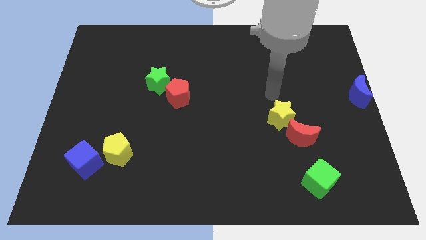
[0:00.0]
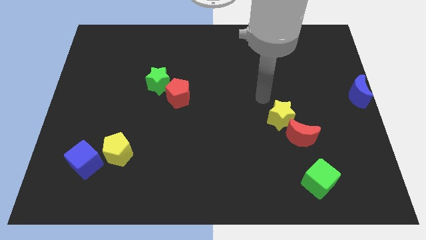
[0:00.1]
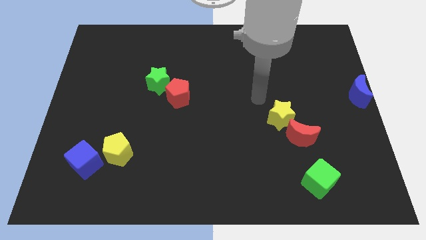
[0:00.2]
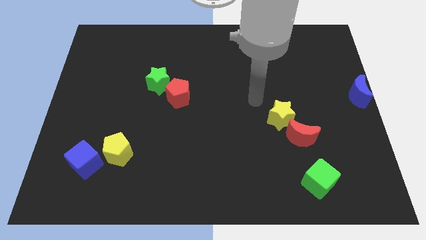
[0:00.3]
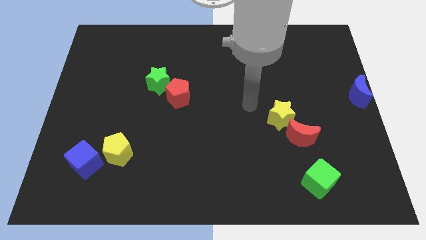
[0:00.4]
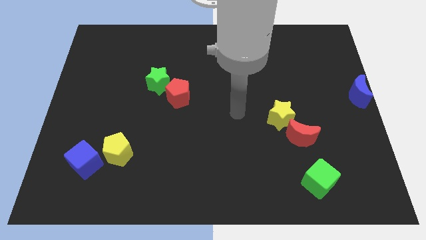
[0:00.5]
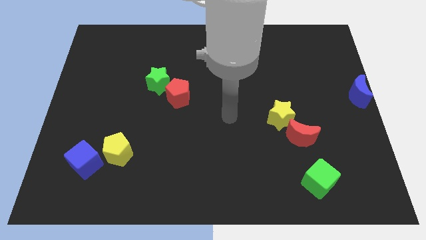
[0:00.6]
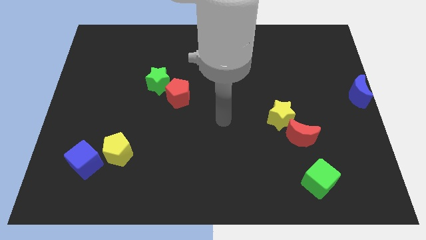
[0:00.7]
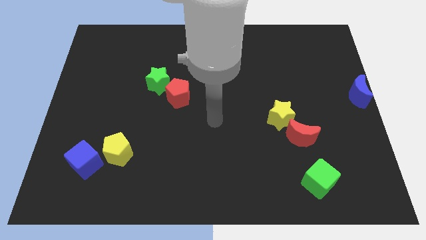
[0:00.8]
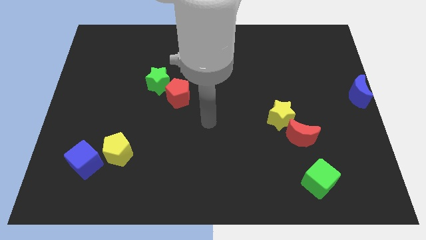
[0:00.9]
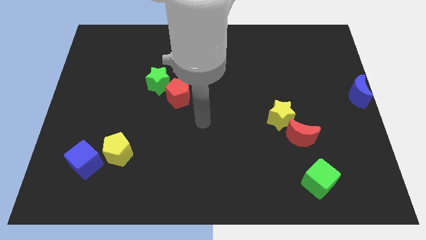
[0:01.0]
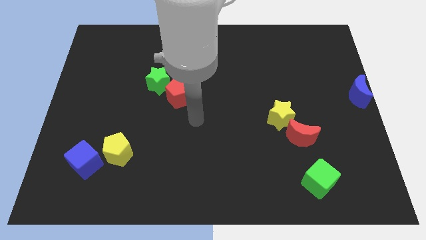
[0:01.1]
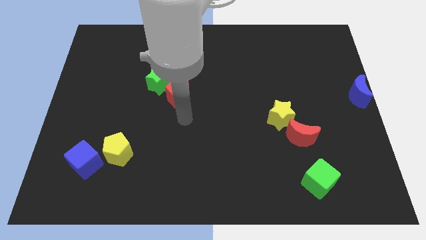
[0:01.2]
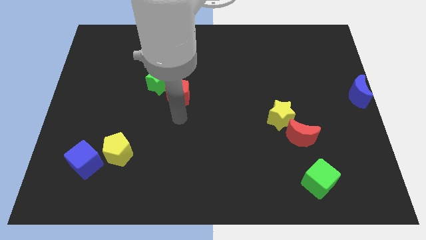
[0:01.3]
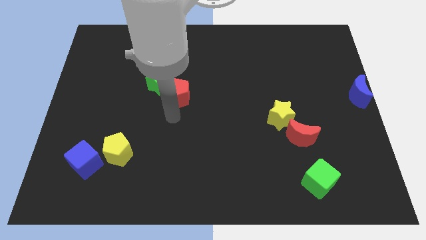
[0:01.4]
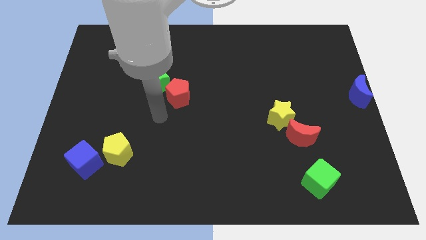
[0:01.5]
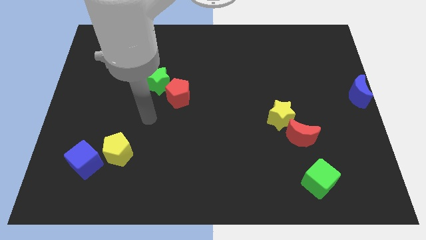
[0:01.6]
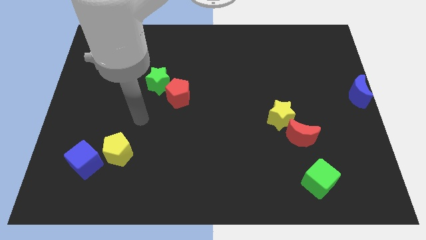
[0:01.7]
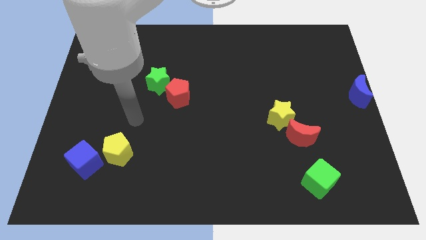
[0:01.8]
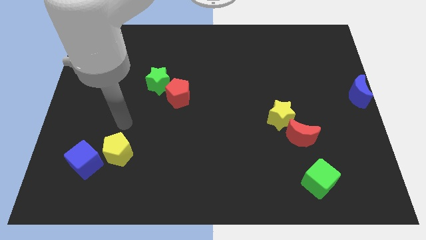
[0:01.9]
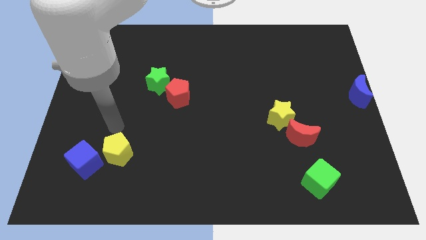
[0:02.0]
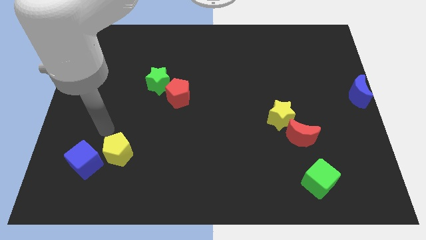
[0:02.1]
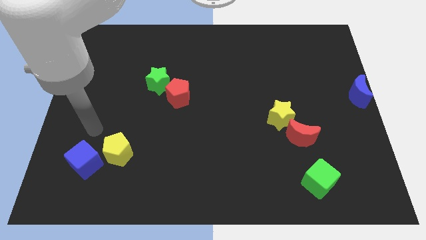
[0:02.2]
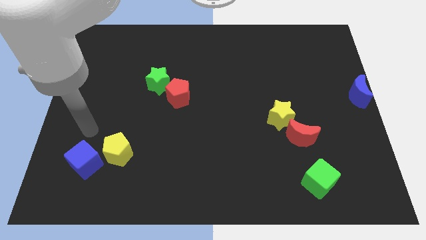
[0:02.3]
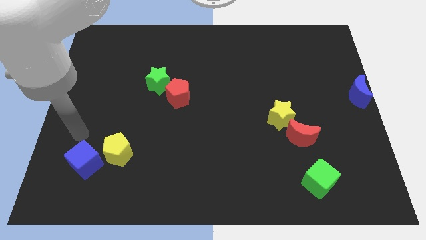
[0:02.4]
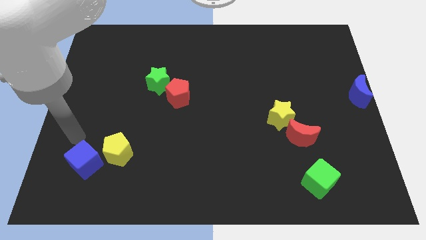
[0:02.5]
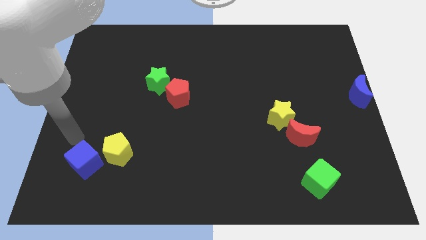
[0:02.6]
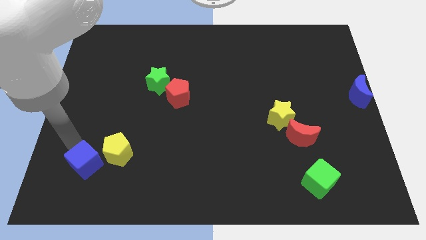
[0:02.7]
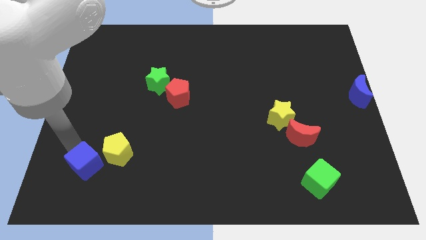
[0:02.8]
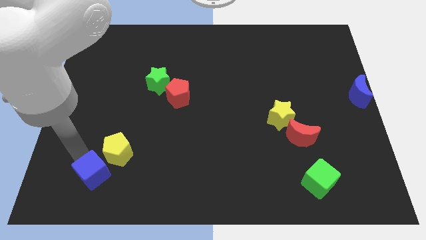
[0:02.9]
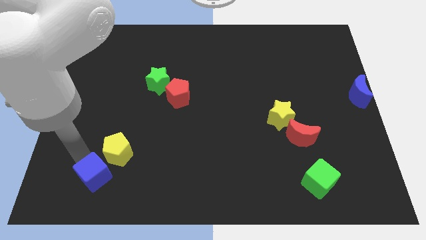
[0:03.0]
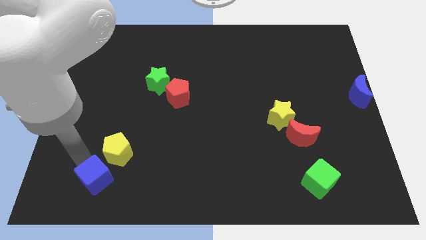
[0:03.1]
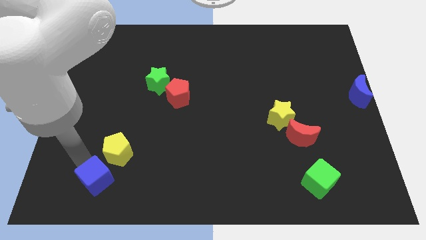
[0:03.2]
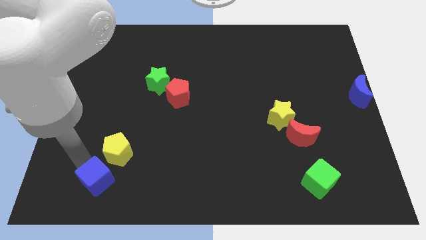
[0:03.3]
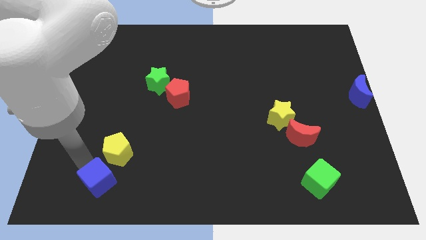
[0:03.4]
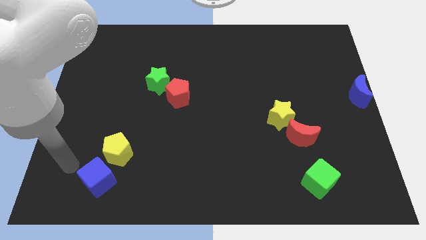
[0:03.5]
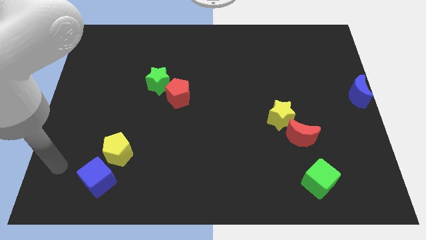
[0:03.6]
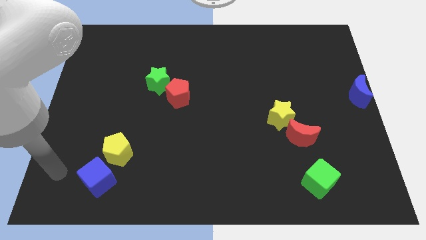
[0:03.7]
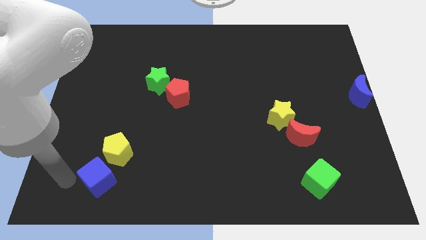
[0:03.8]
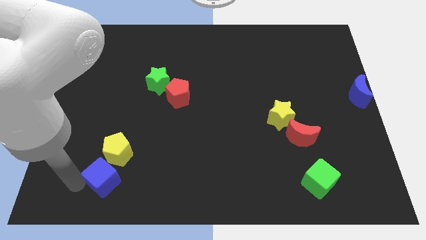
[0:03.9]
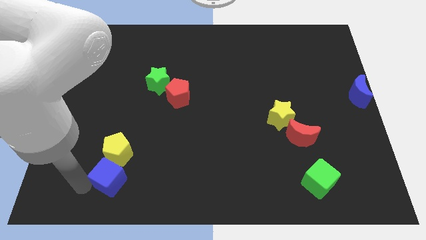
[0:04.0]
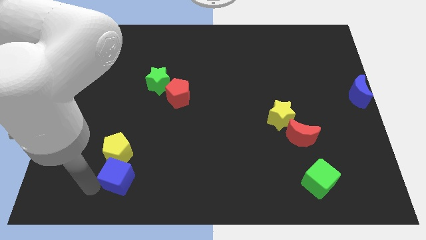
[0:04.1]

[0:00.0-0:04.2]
slide the blue cube below the yellow pentagon

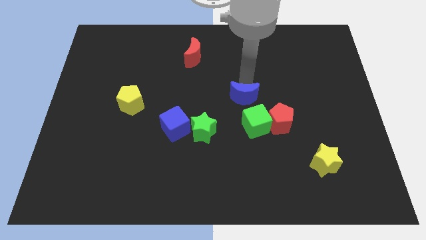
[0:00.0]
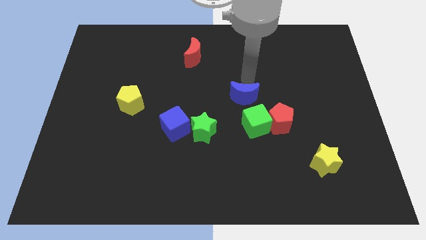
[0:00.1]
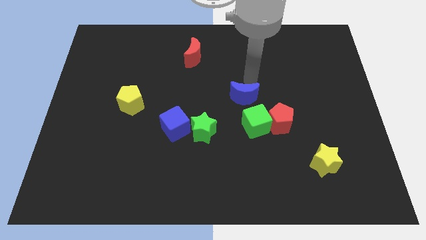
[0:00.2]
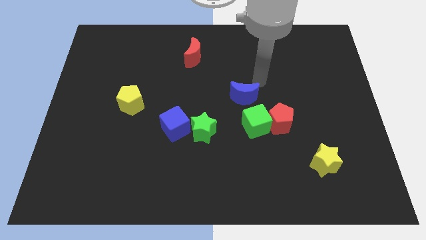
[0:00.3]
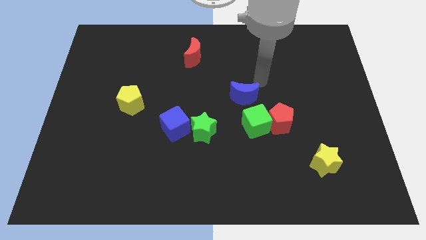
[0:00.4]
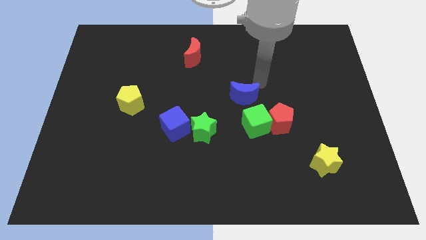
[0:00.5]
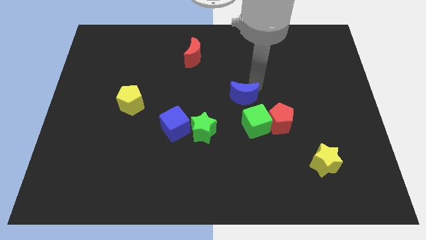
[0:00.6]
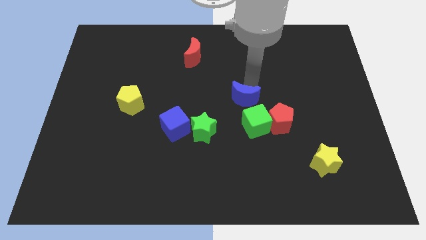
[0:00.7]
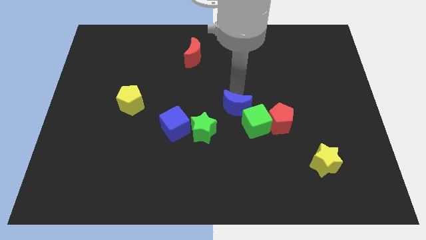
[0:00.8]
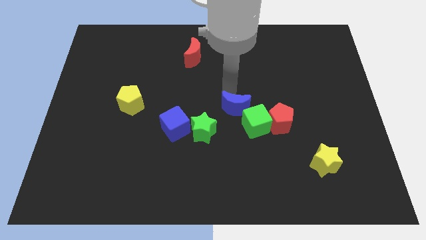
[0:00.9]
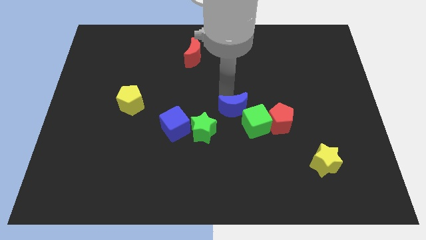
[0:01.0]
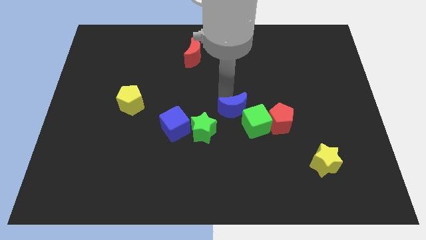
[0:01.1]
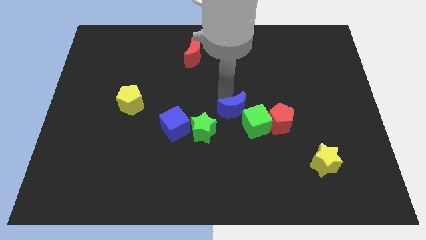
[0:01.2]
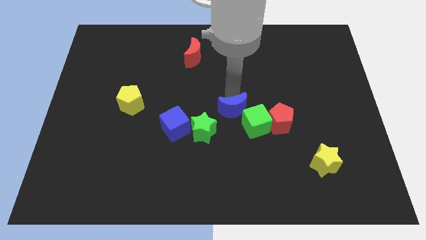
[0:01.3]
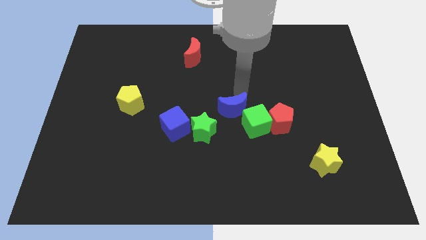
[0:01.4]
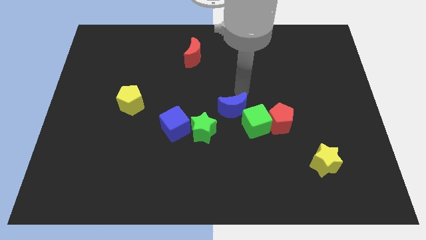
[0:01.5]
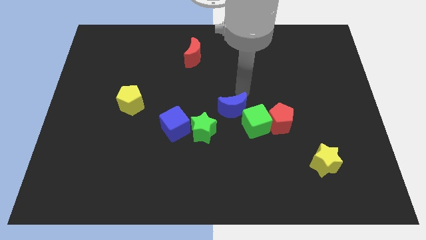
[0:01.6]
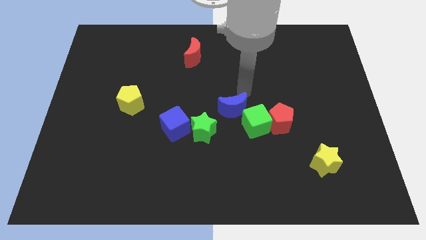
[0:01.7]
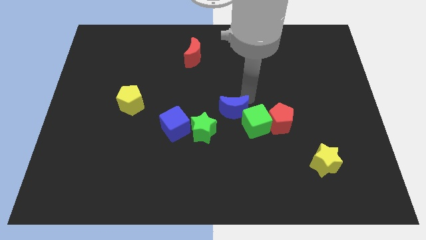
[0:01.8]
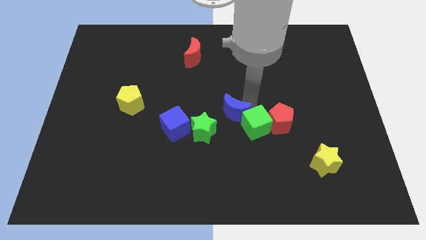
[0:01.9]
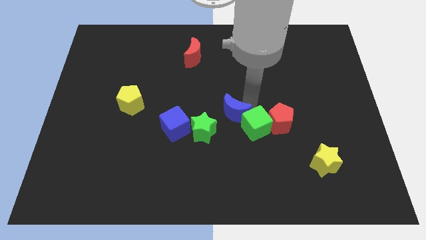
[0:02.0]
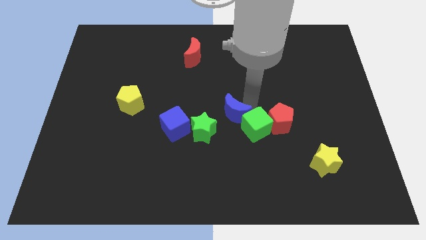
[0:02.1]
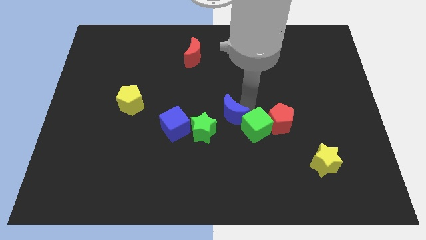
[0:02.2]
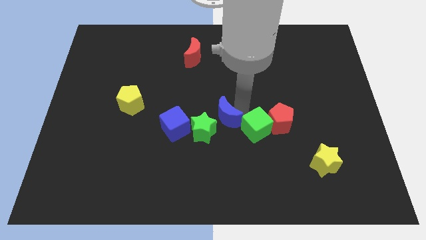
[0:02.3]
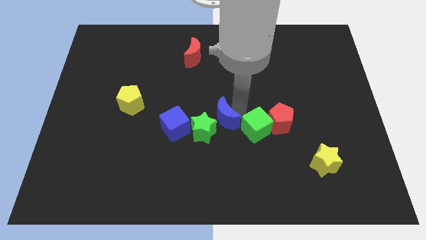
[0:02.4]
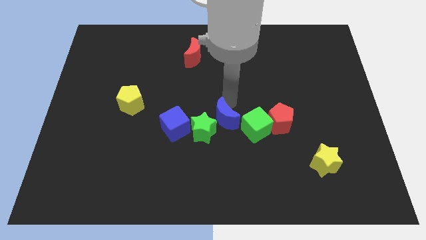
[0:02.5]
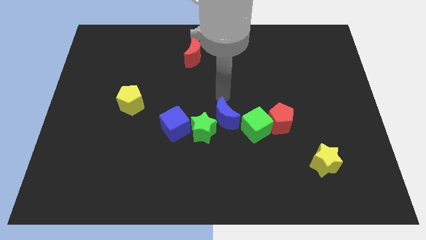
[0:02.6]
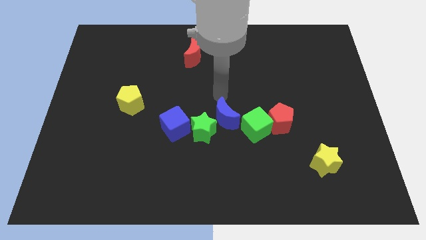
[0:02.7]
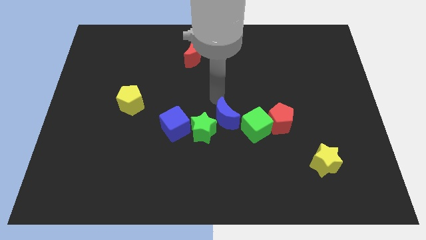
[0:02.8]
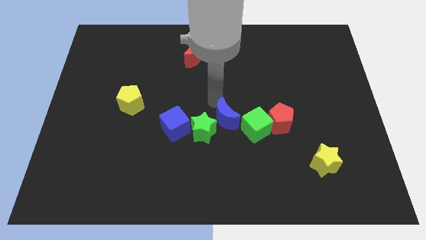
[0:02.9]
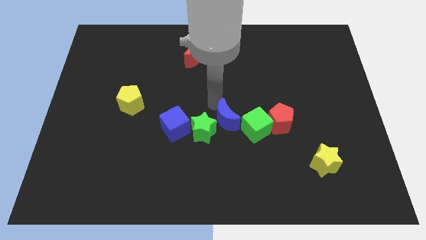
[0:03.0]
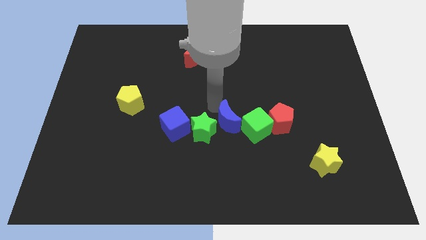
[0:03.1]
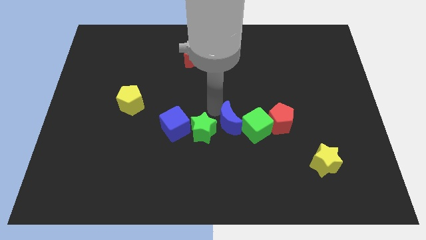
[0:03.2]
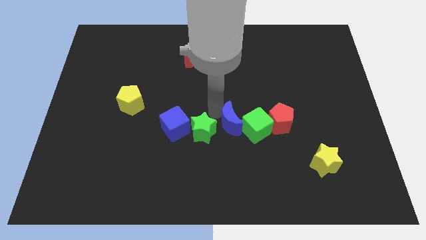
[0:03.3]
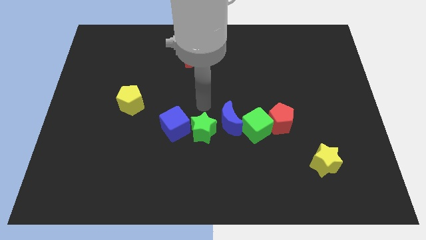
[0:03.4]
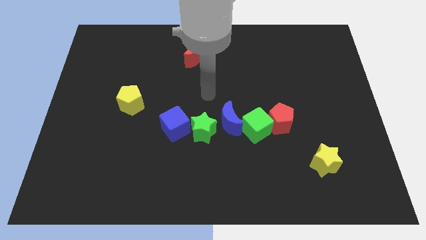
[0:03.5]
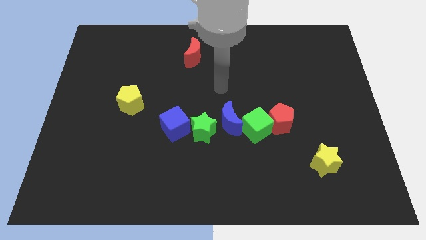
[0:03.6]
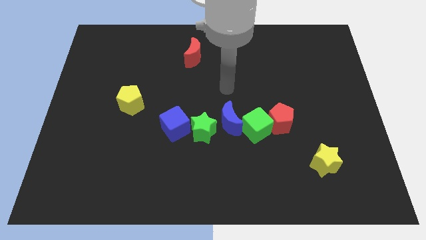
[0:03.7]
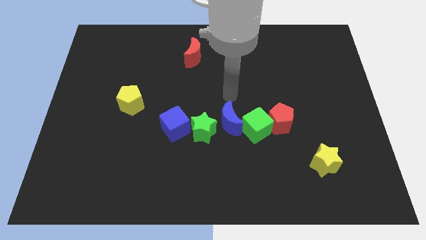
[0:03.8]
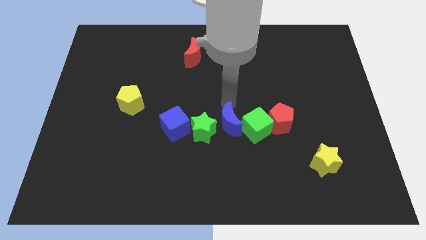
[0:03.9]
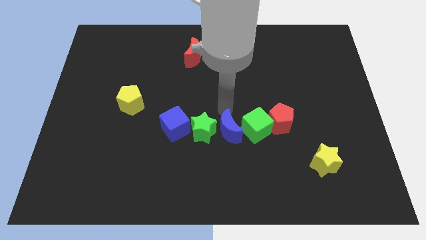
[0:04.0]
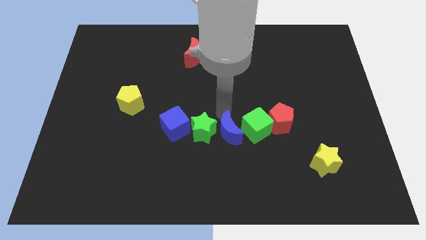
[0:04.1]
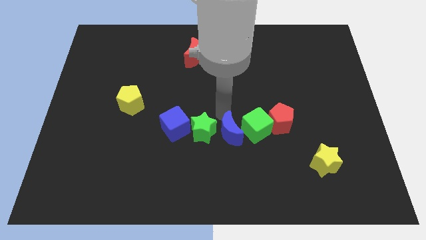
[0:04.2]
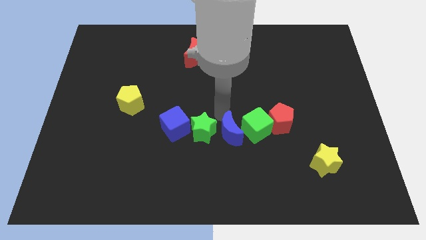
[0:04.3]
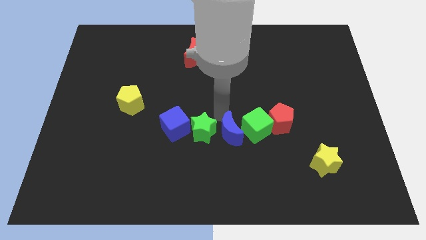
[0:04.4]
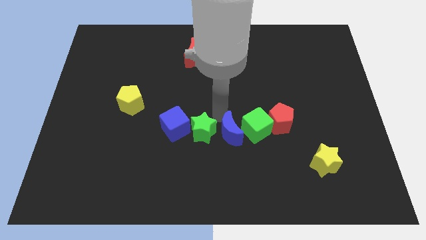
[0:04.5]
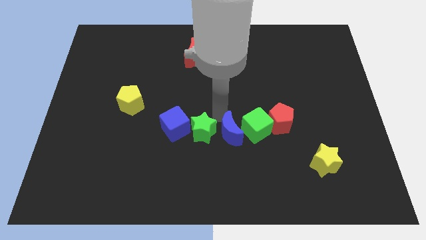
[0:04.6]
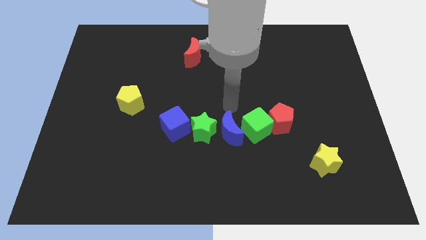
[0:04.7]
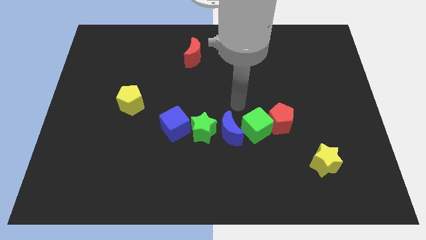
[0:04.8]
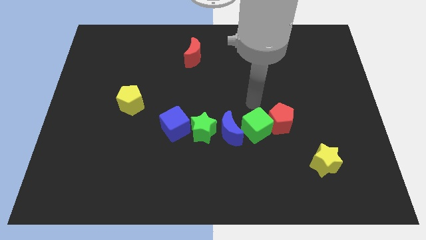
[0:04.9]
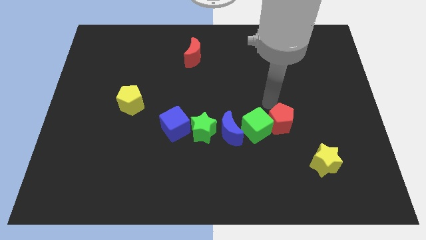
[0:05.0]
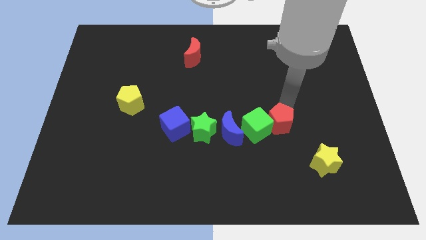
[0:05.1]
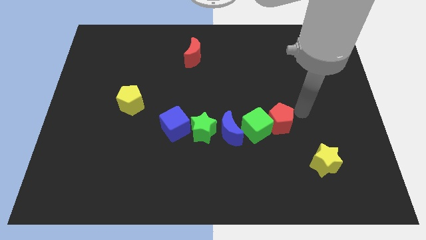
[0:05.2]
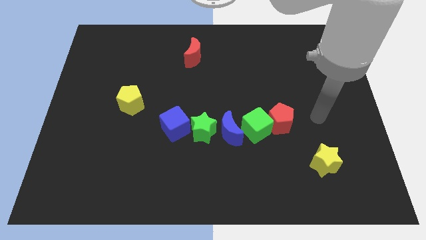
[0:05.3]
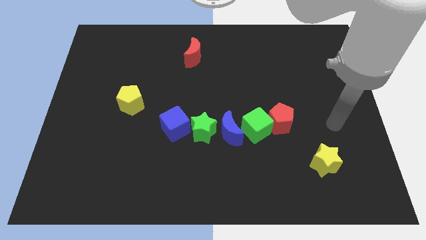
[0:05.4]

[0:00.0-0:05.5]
move the blue crescent to the right of green star
